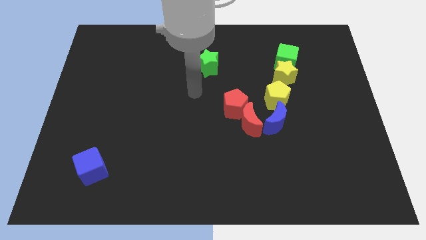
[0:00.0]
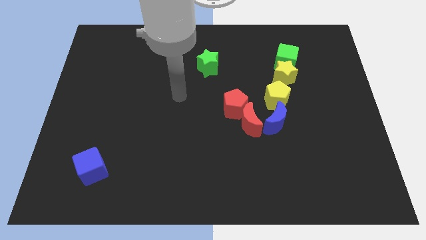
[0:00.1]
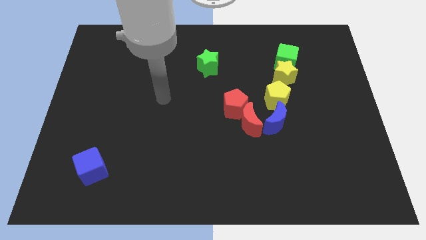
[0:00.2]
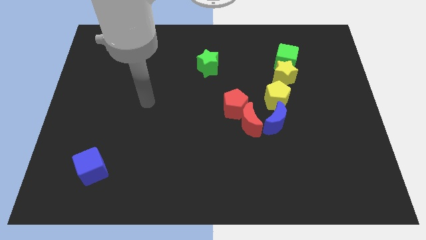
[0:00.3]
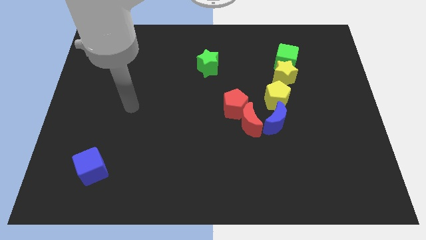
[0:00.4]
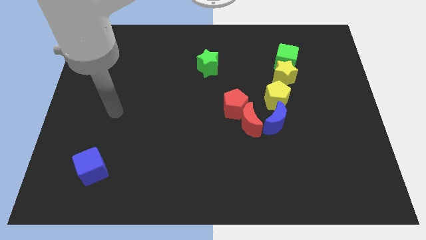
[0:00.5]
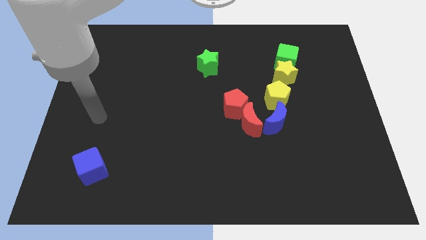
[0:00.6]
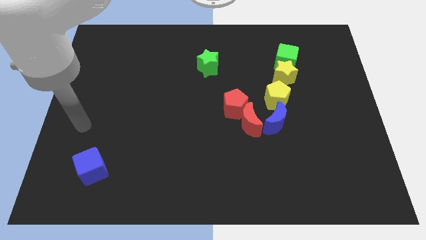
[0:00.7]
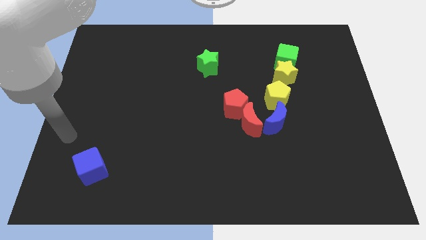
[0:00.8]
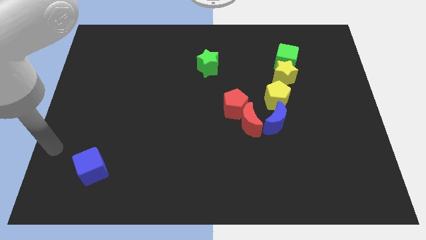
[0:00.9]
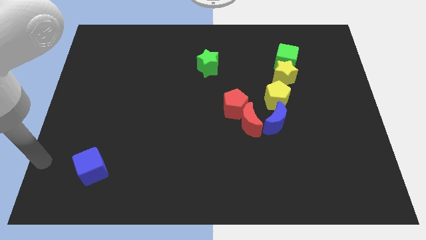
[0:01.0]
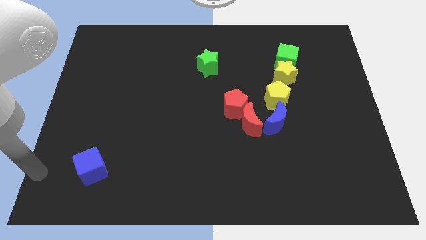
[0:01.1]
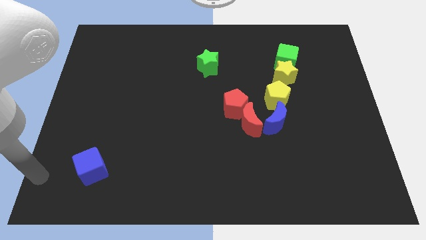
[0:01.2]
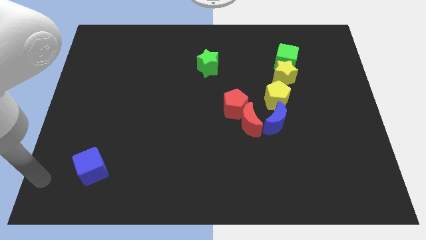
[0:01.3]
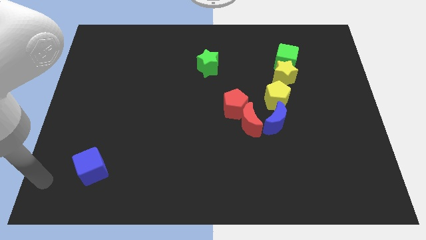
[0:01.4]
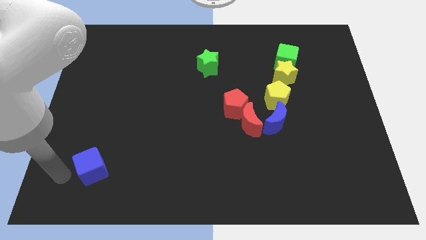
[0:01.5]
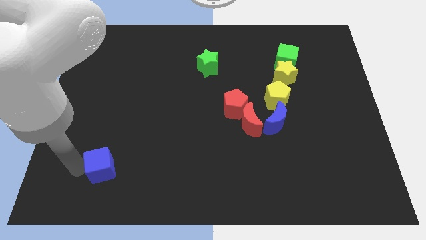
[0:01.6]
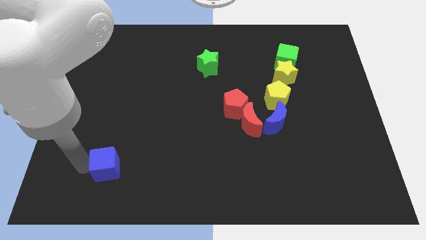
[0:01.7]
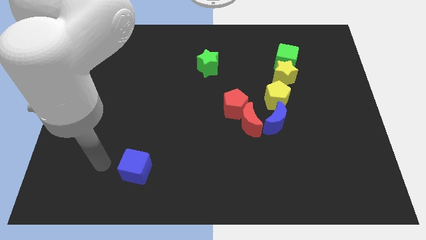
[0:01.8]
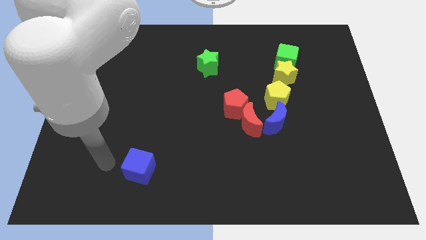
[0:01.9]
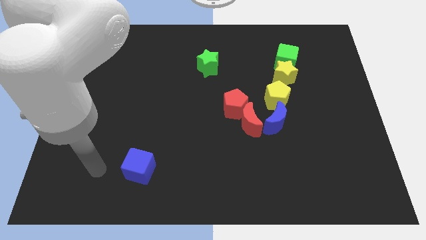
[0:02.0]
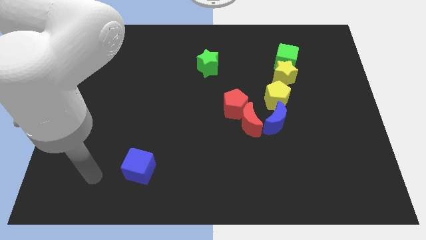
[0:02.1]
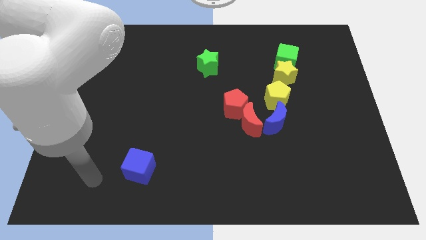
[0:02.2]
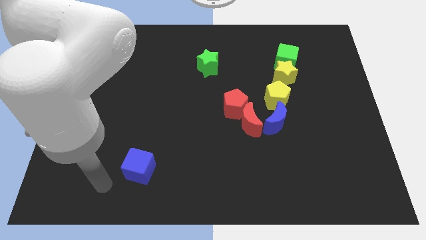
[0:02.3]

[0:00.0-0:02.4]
push the blue cube to the right

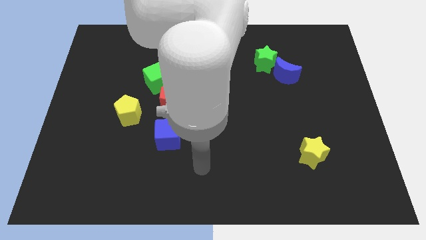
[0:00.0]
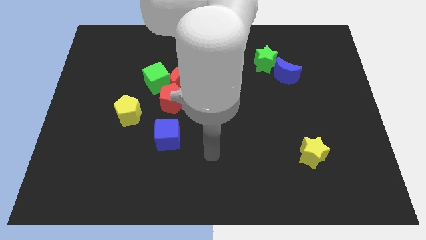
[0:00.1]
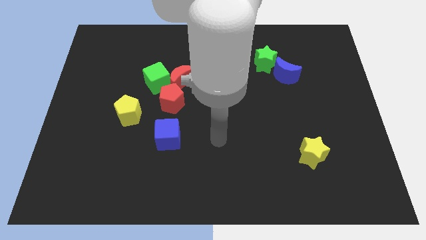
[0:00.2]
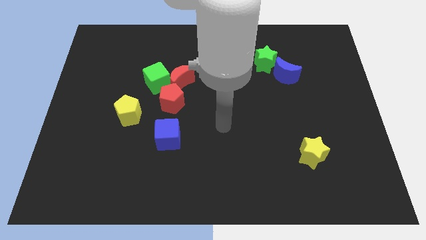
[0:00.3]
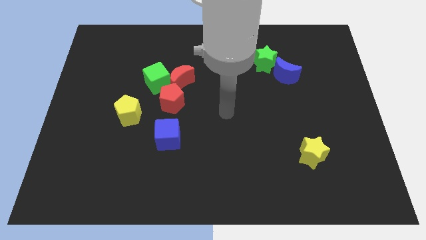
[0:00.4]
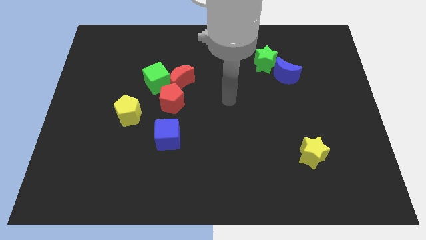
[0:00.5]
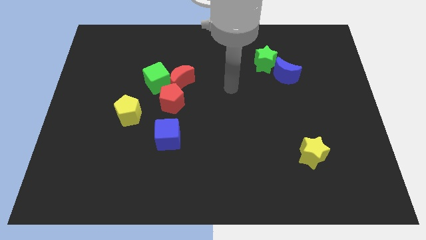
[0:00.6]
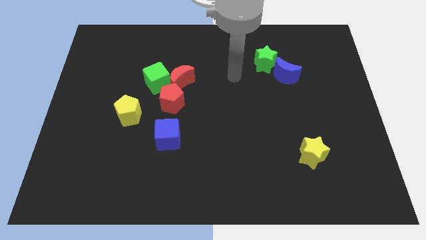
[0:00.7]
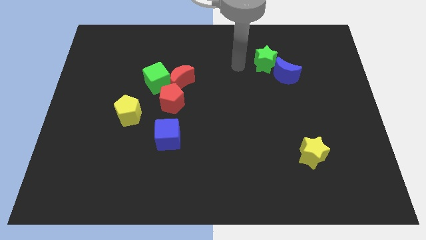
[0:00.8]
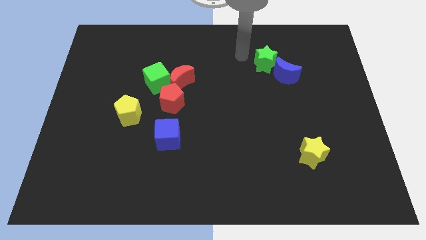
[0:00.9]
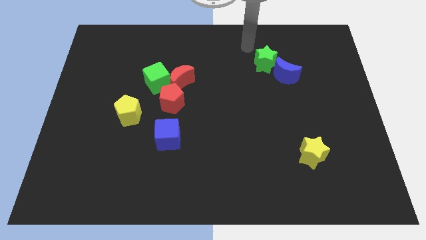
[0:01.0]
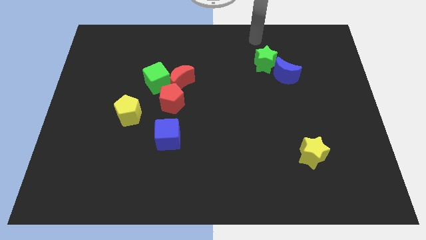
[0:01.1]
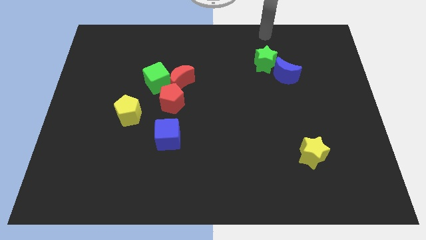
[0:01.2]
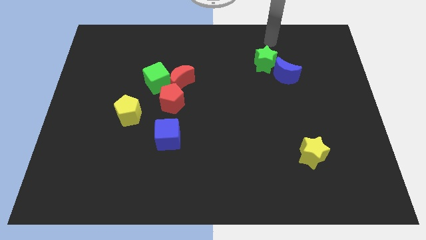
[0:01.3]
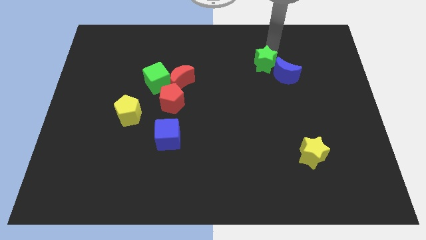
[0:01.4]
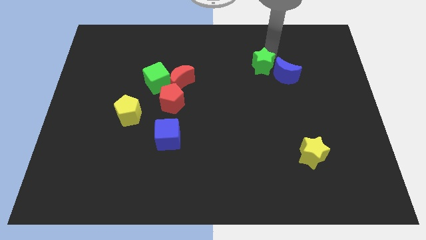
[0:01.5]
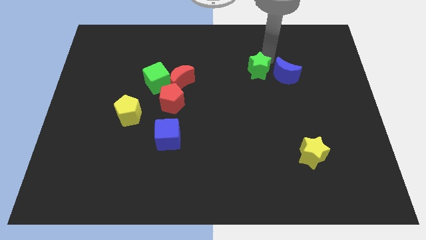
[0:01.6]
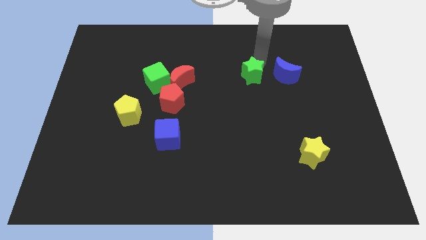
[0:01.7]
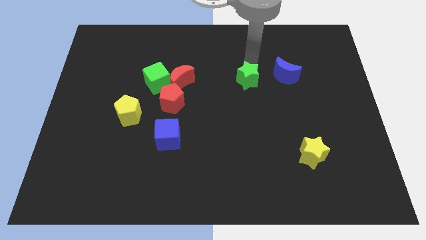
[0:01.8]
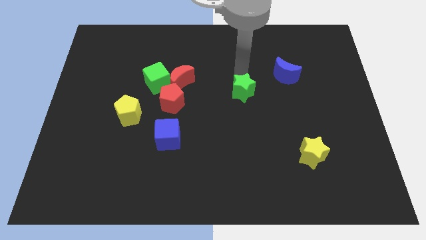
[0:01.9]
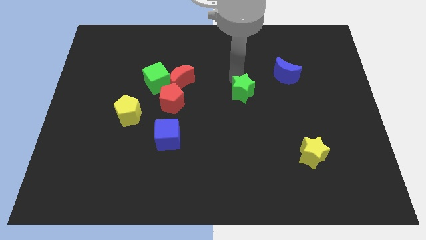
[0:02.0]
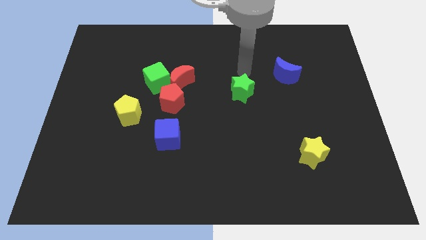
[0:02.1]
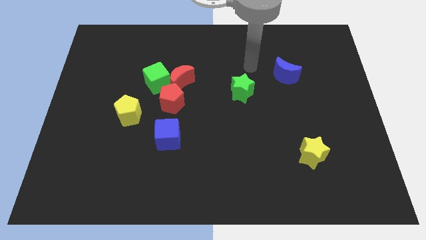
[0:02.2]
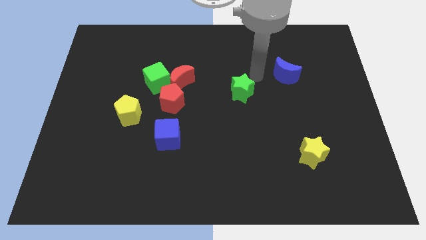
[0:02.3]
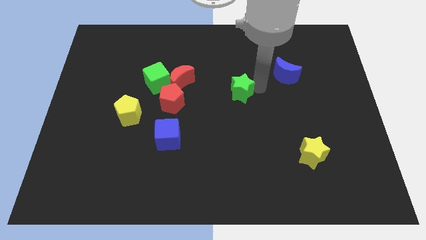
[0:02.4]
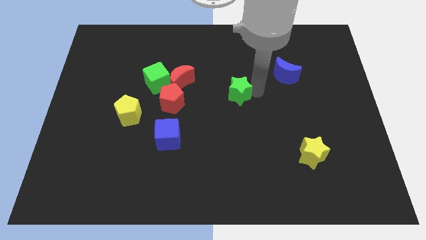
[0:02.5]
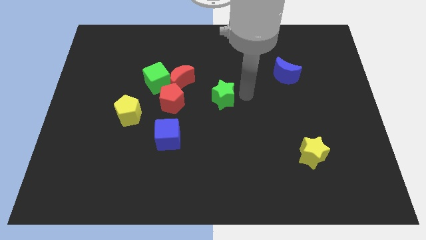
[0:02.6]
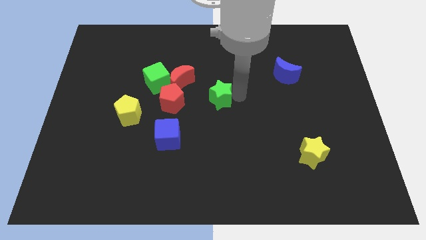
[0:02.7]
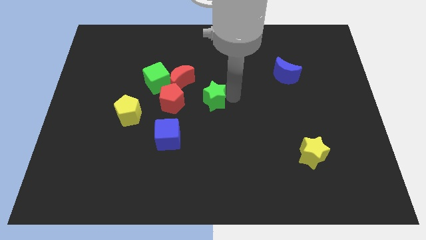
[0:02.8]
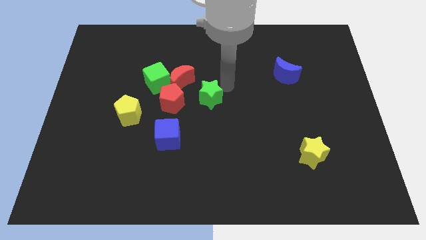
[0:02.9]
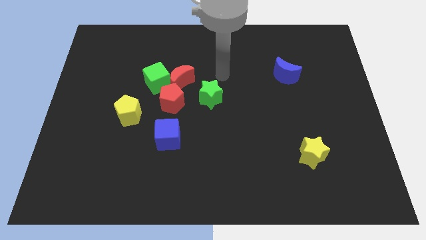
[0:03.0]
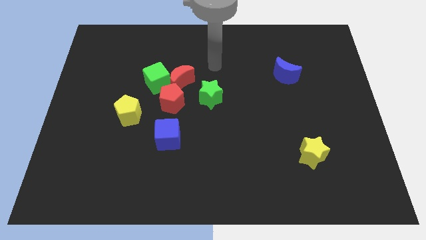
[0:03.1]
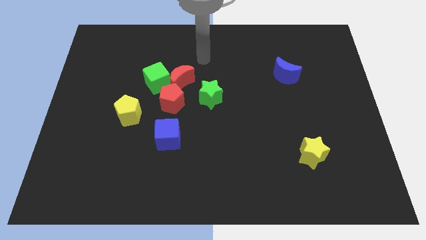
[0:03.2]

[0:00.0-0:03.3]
place the green star right to the red pentagon

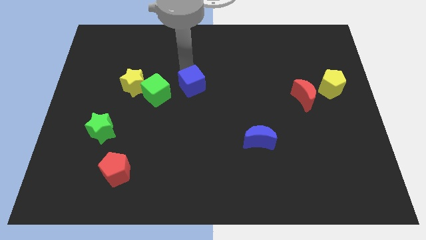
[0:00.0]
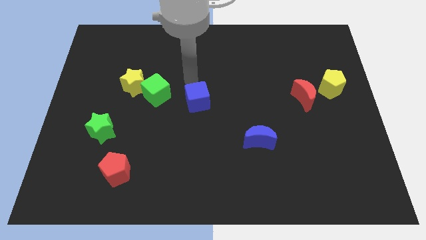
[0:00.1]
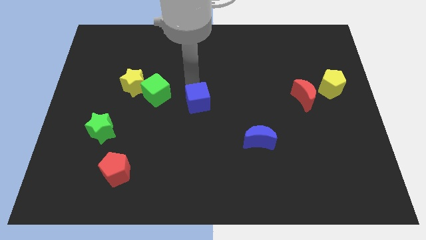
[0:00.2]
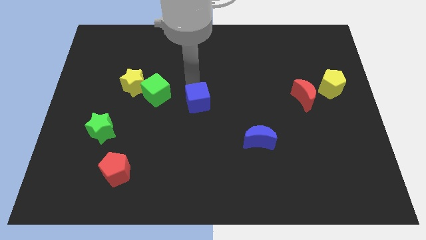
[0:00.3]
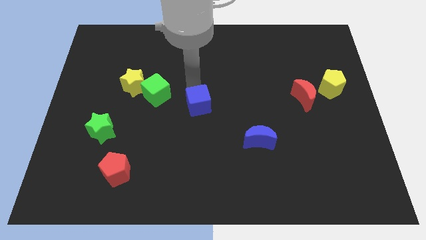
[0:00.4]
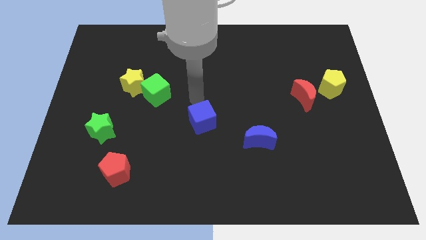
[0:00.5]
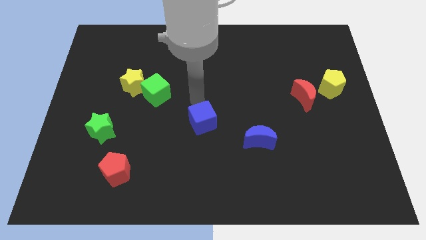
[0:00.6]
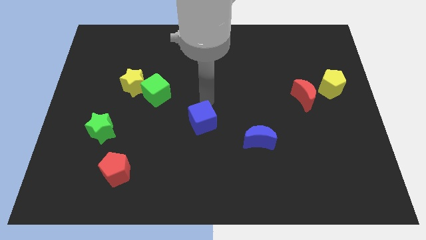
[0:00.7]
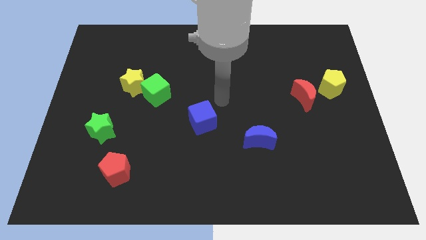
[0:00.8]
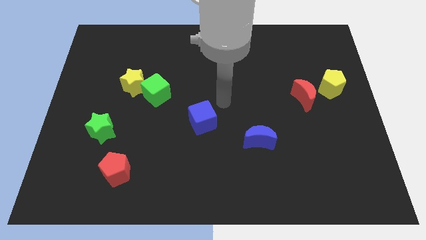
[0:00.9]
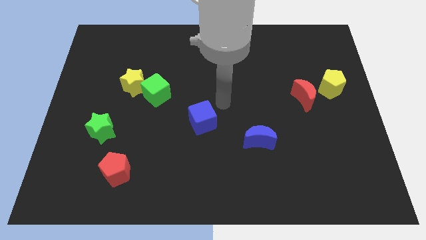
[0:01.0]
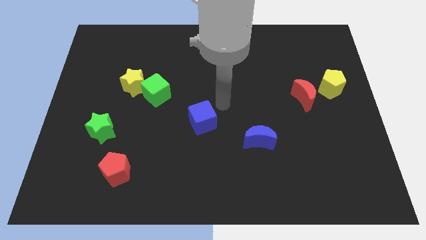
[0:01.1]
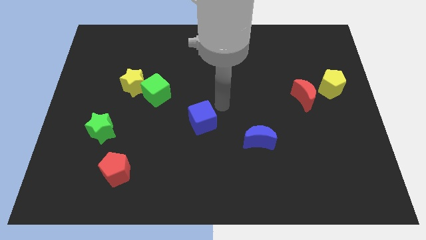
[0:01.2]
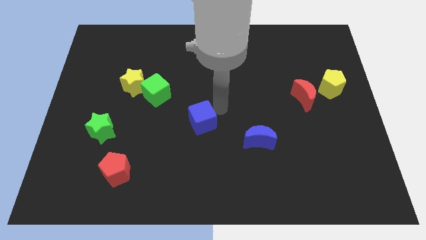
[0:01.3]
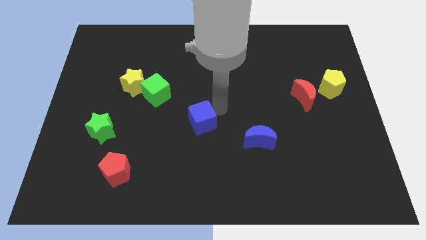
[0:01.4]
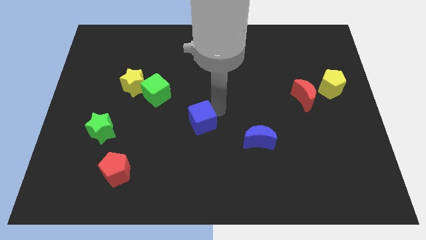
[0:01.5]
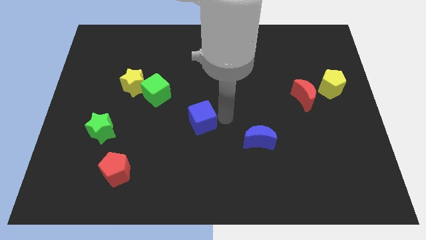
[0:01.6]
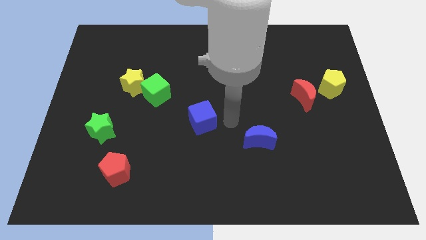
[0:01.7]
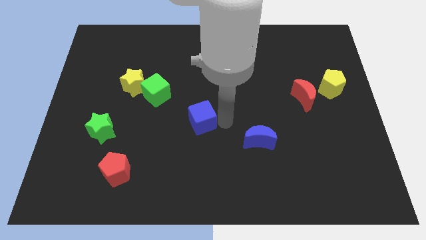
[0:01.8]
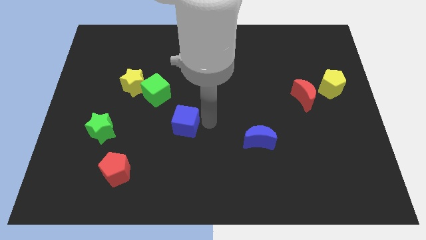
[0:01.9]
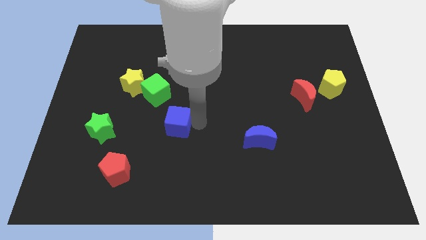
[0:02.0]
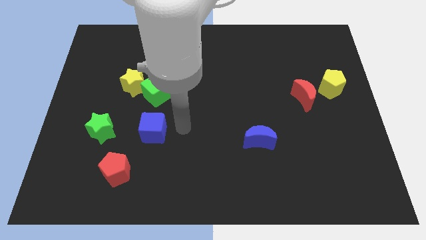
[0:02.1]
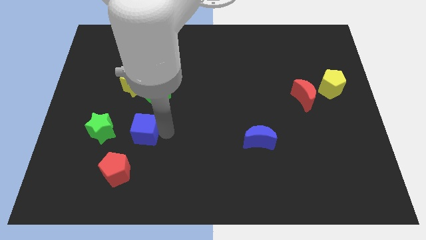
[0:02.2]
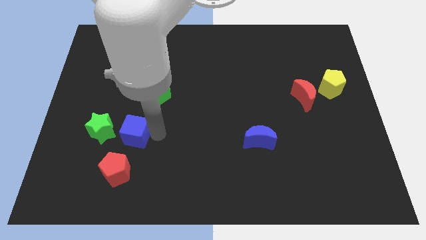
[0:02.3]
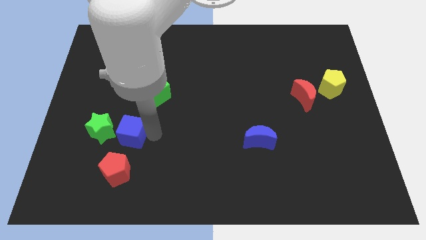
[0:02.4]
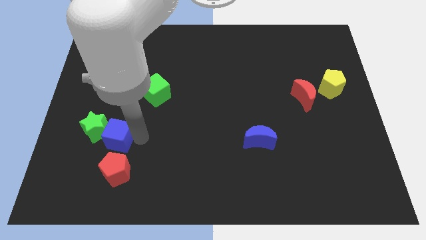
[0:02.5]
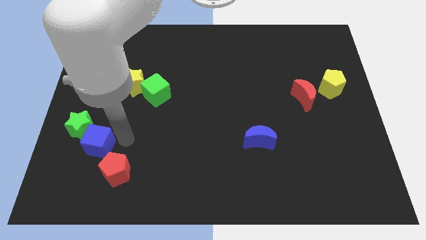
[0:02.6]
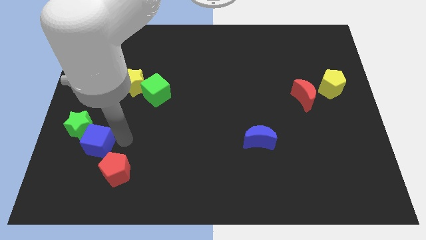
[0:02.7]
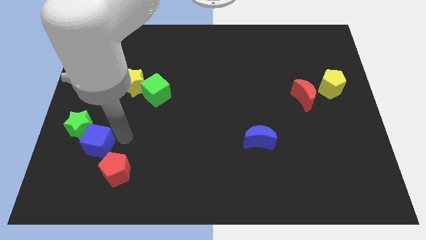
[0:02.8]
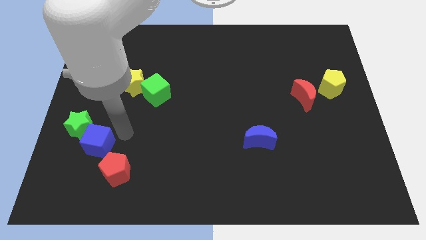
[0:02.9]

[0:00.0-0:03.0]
push blue cube in to green star
